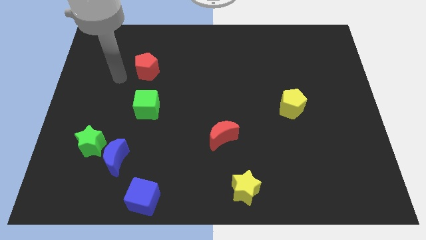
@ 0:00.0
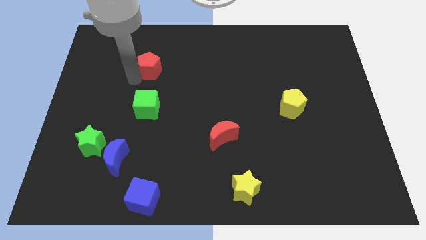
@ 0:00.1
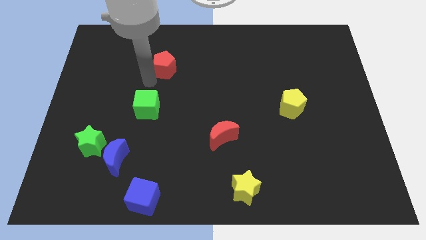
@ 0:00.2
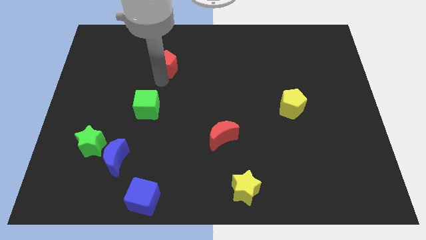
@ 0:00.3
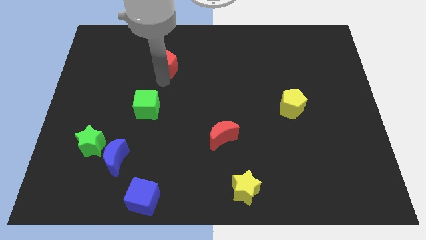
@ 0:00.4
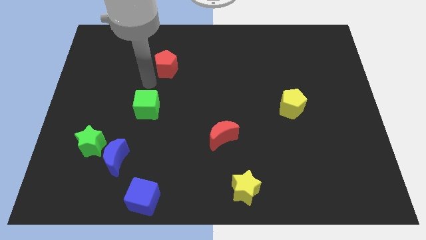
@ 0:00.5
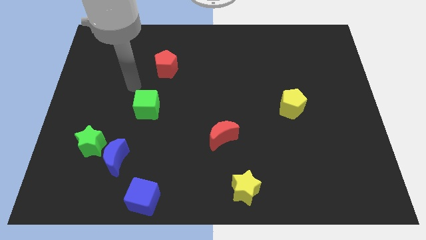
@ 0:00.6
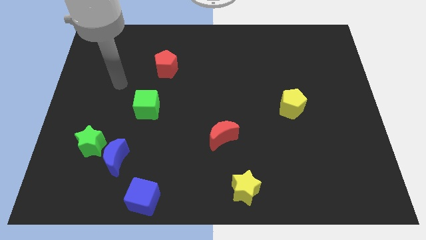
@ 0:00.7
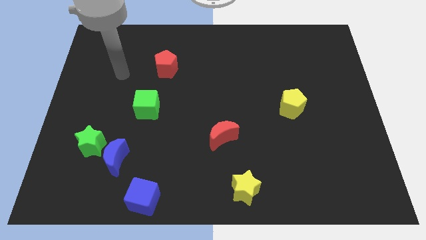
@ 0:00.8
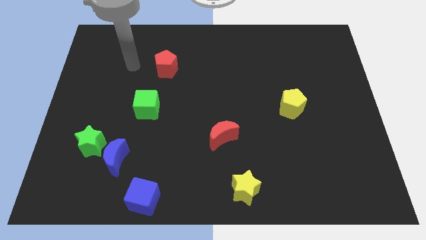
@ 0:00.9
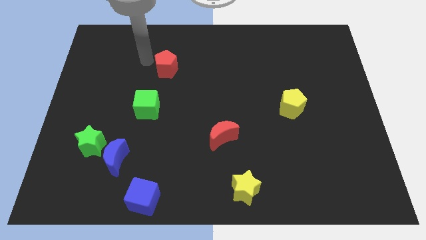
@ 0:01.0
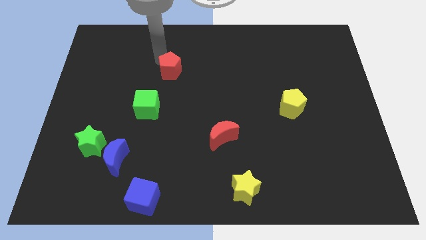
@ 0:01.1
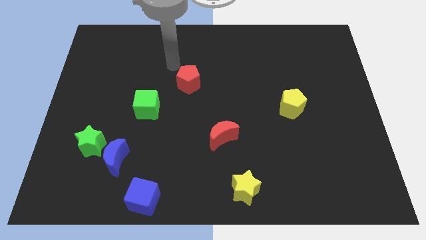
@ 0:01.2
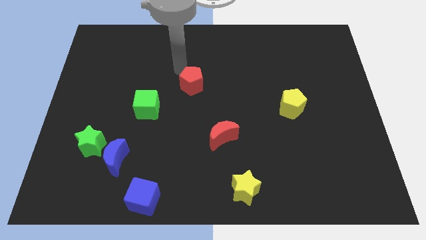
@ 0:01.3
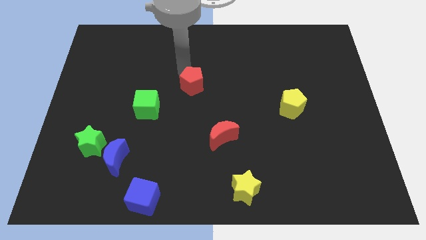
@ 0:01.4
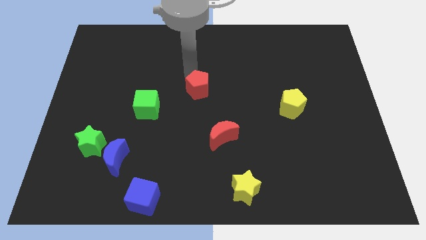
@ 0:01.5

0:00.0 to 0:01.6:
push the red pentagon towards the center of the board

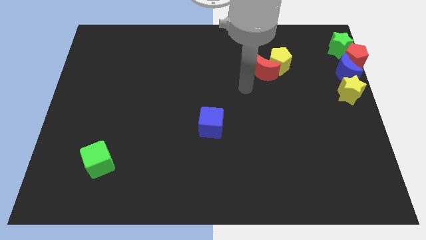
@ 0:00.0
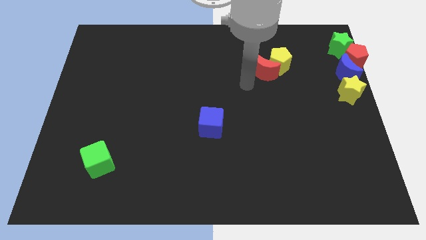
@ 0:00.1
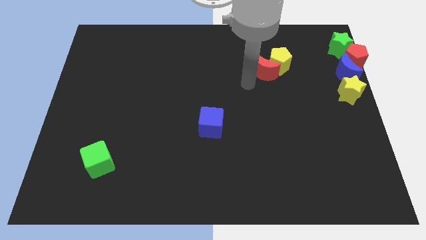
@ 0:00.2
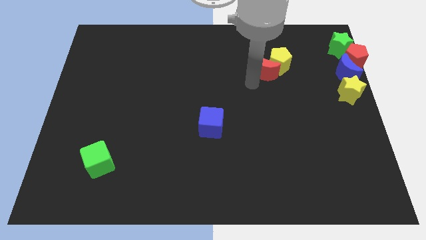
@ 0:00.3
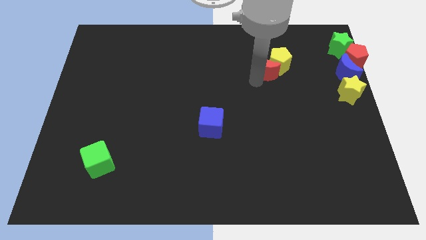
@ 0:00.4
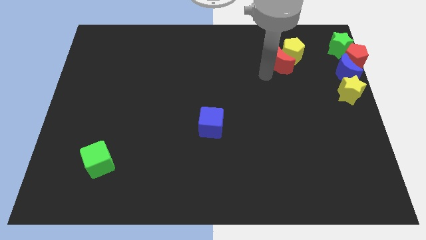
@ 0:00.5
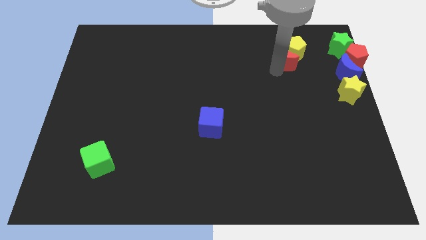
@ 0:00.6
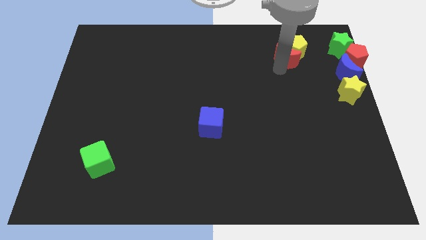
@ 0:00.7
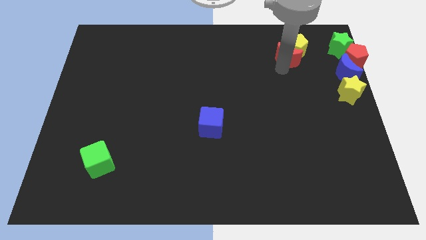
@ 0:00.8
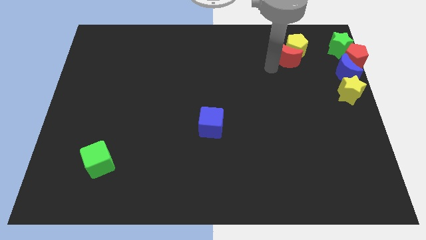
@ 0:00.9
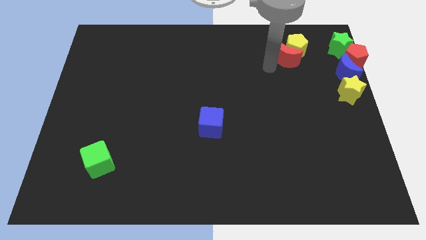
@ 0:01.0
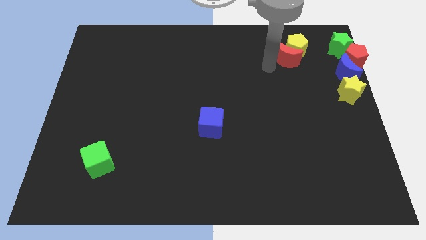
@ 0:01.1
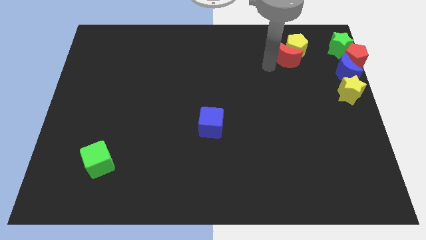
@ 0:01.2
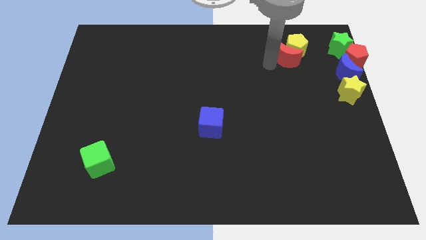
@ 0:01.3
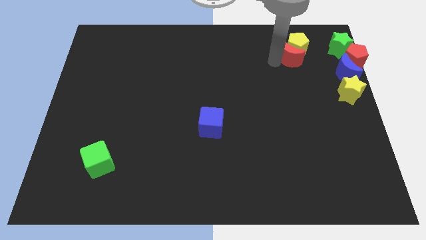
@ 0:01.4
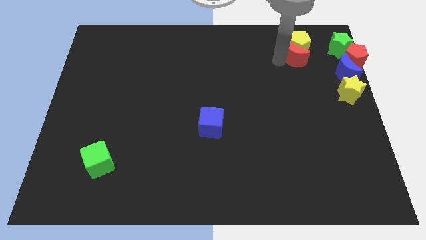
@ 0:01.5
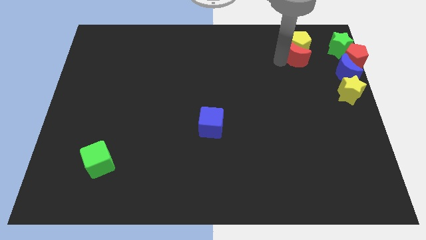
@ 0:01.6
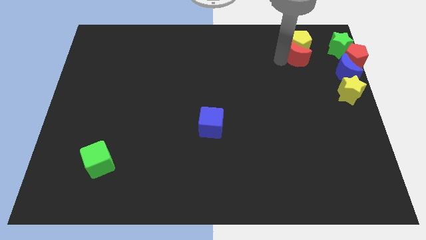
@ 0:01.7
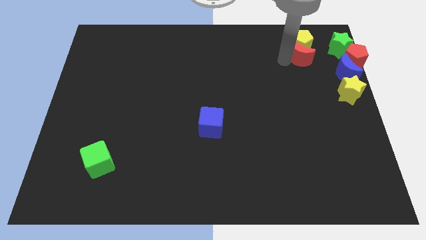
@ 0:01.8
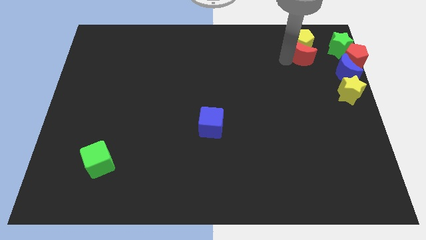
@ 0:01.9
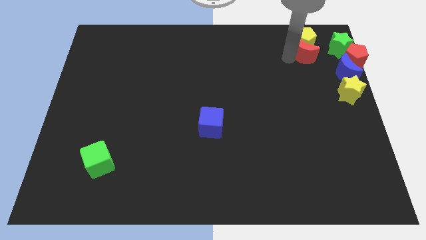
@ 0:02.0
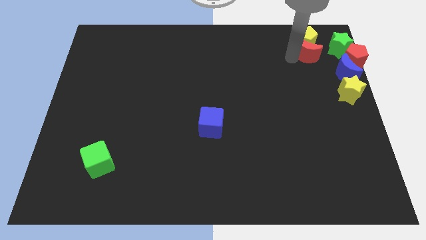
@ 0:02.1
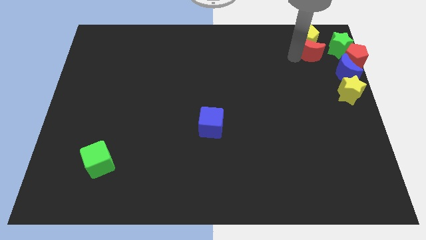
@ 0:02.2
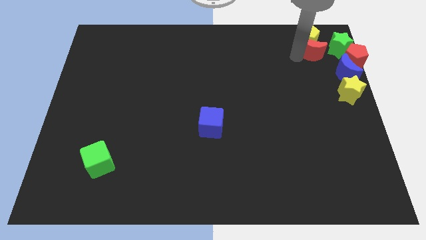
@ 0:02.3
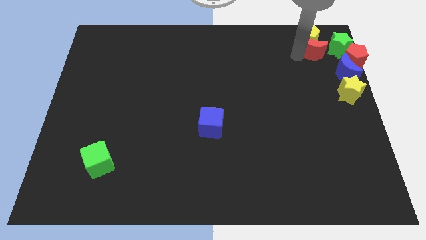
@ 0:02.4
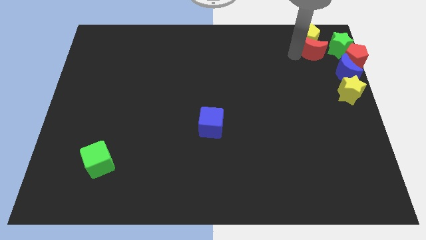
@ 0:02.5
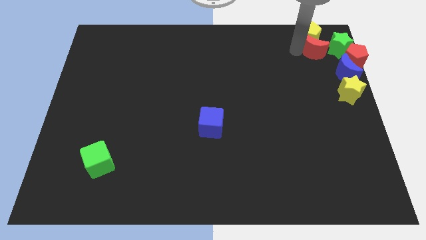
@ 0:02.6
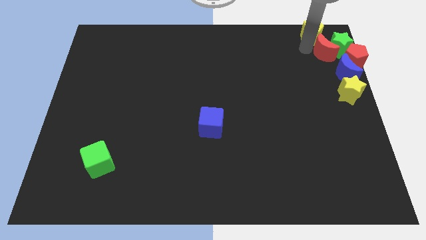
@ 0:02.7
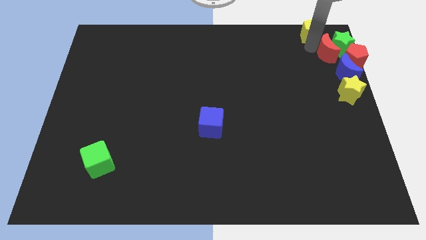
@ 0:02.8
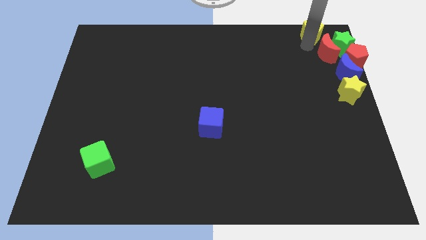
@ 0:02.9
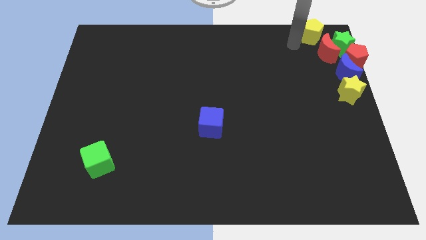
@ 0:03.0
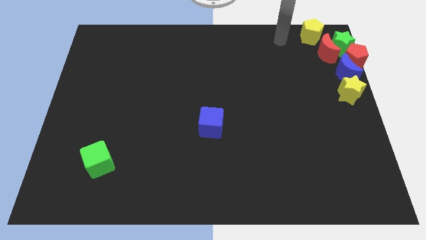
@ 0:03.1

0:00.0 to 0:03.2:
move the yellow pentagon and red moon at the top right side of the corner

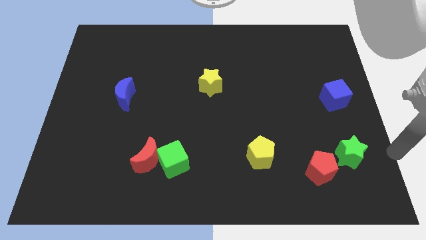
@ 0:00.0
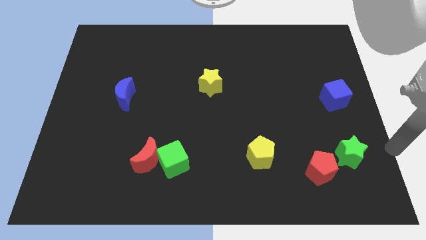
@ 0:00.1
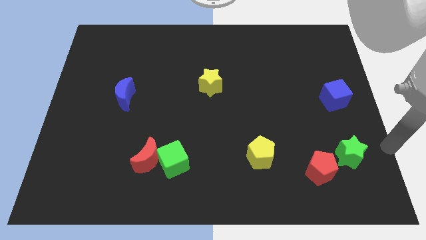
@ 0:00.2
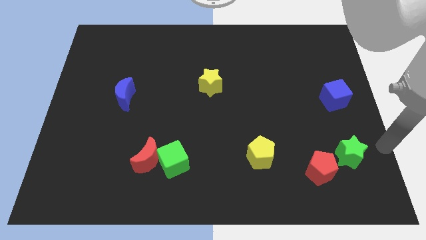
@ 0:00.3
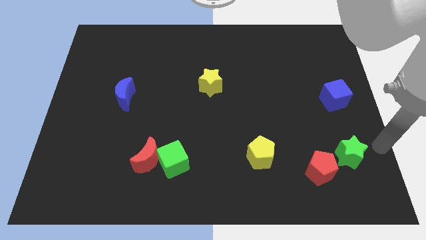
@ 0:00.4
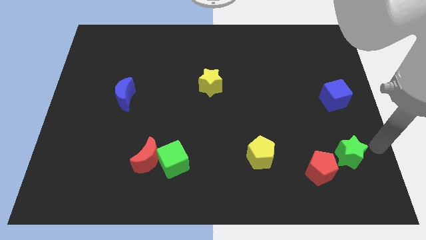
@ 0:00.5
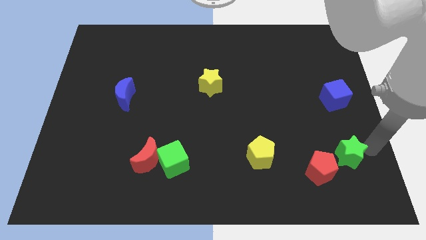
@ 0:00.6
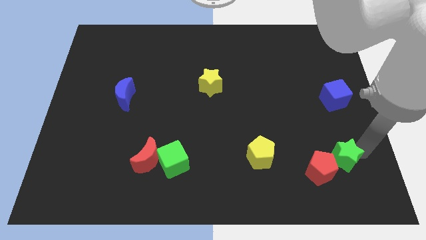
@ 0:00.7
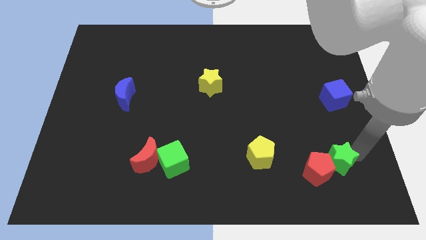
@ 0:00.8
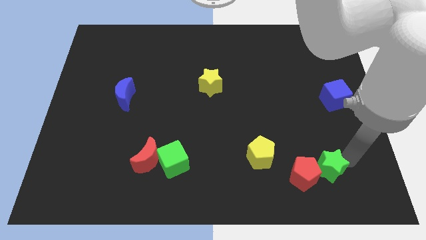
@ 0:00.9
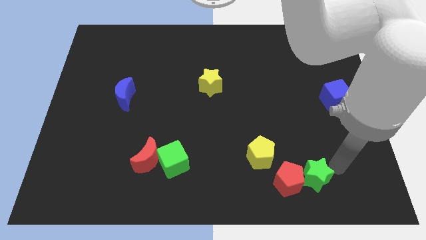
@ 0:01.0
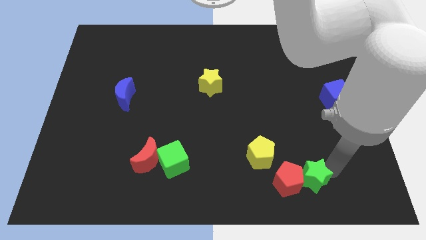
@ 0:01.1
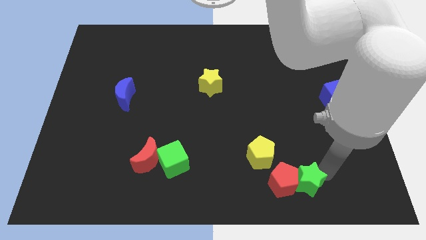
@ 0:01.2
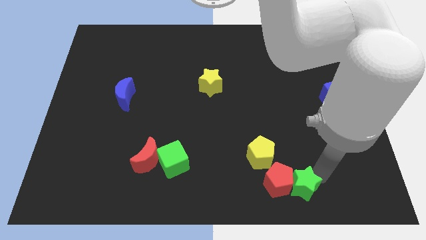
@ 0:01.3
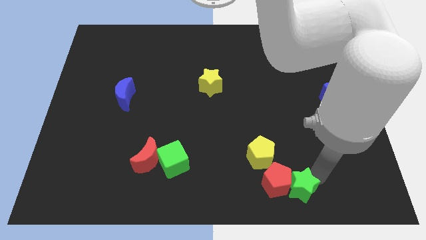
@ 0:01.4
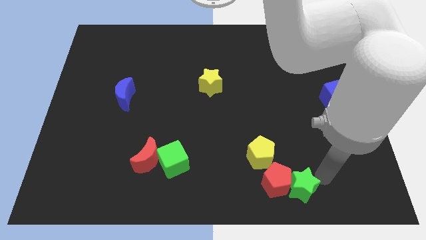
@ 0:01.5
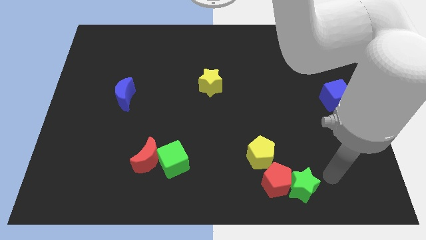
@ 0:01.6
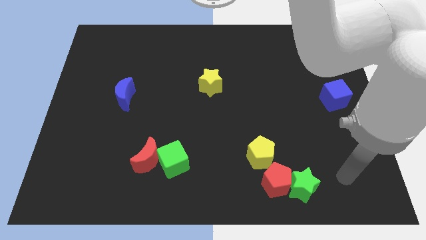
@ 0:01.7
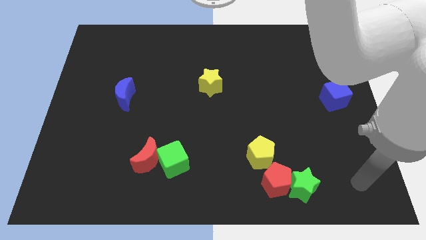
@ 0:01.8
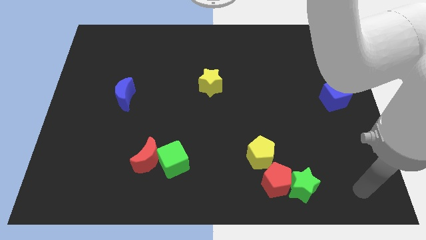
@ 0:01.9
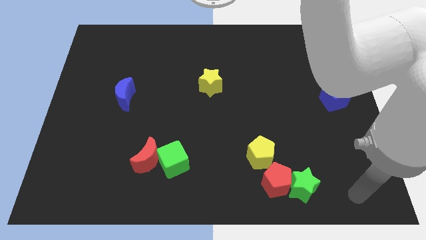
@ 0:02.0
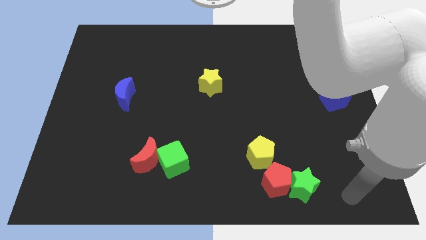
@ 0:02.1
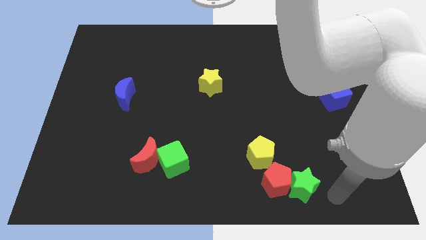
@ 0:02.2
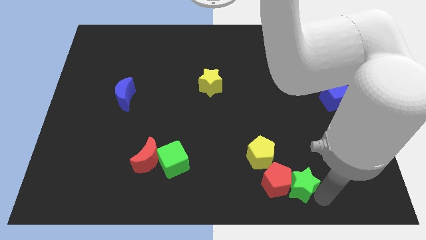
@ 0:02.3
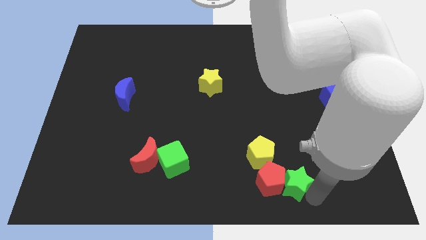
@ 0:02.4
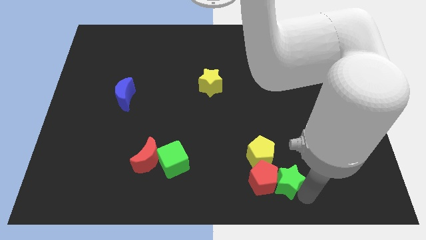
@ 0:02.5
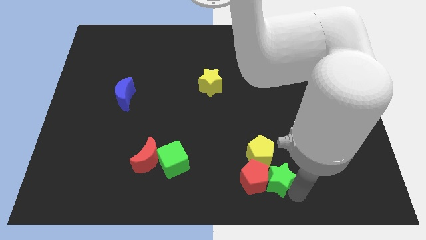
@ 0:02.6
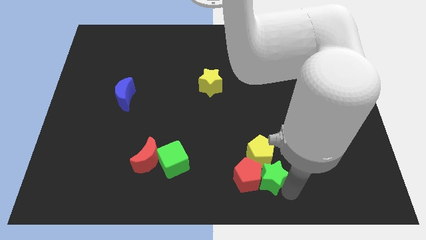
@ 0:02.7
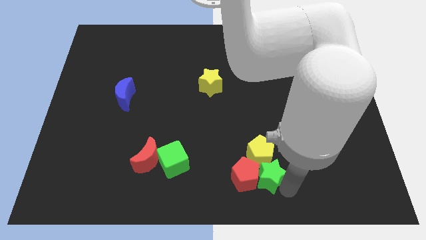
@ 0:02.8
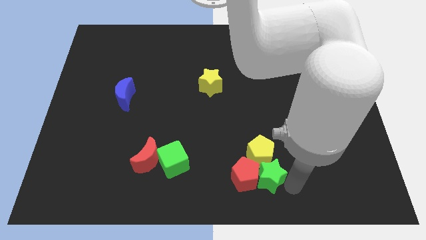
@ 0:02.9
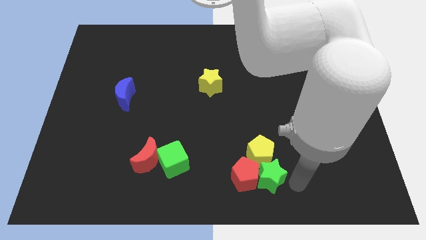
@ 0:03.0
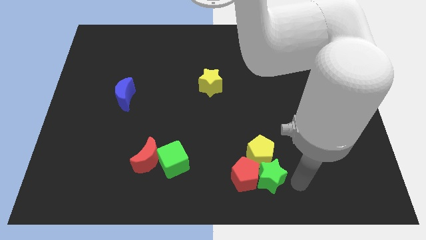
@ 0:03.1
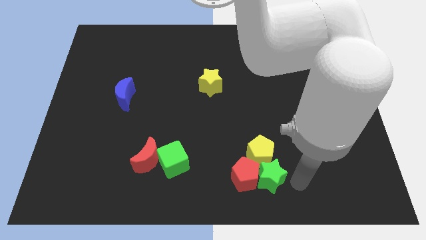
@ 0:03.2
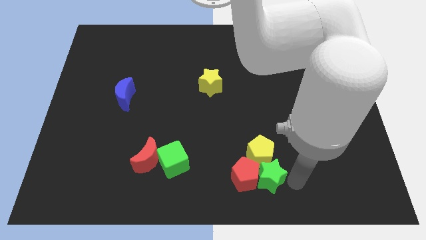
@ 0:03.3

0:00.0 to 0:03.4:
put the green star and red pentagon together at the bottom of the yellow pentagon

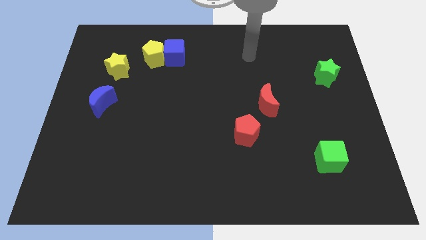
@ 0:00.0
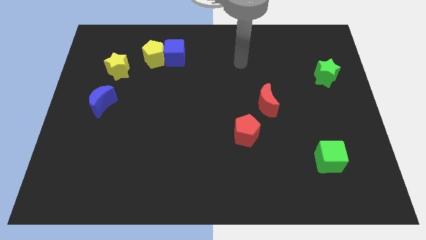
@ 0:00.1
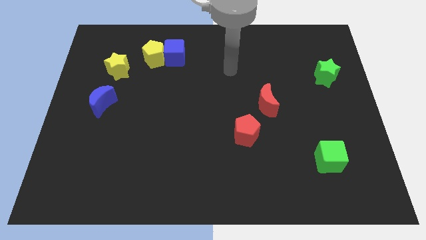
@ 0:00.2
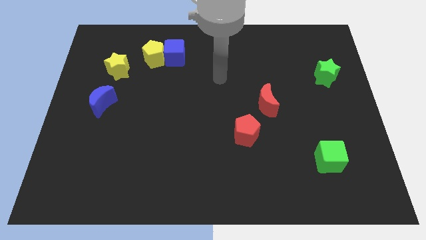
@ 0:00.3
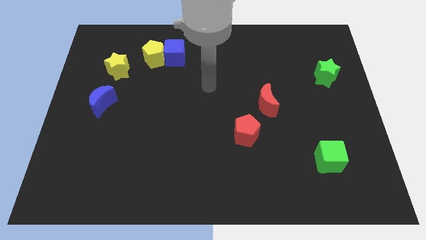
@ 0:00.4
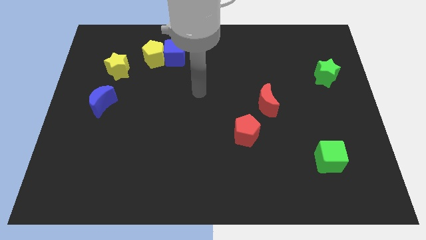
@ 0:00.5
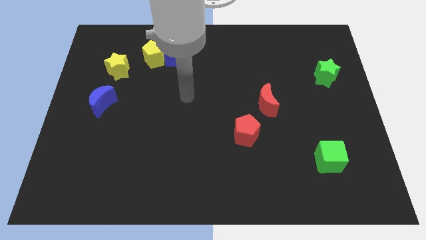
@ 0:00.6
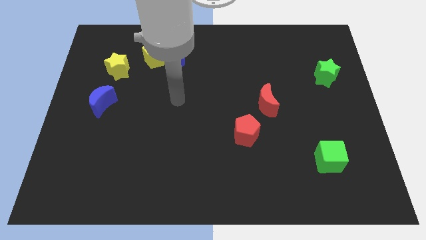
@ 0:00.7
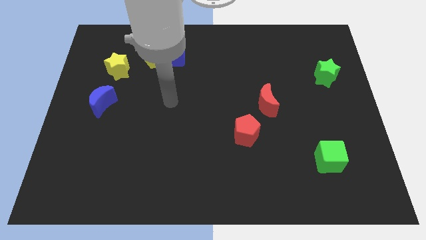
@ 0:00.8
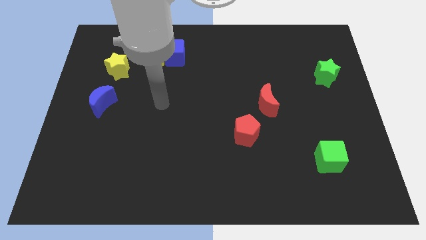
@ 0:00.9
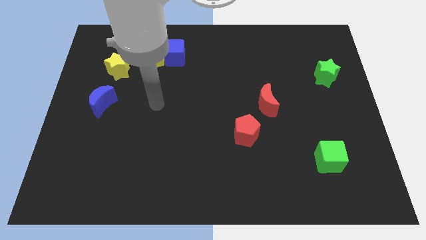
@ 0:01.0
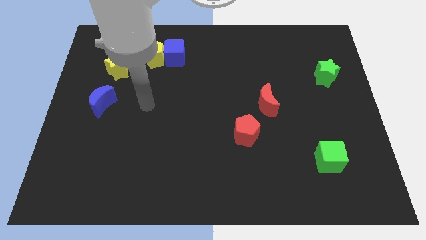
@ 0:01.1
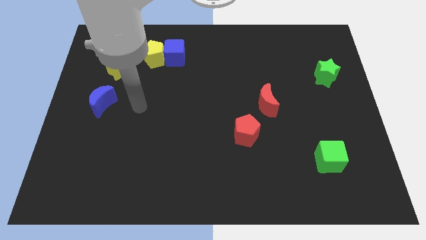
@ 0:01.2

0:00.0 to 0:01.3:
move the arm near the blue moon
